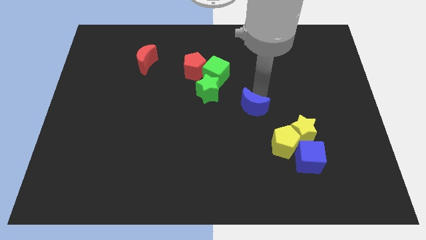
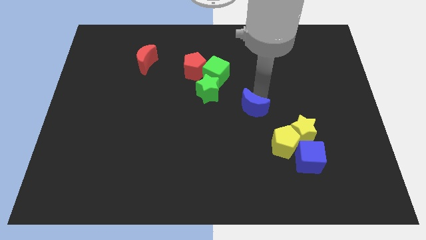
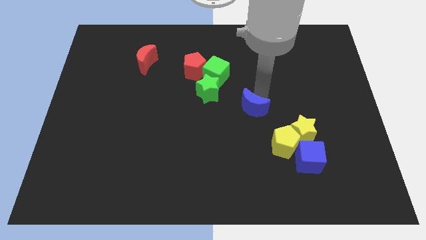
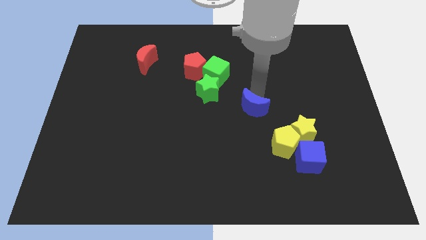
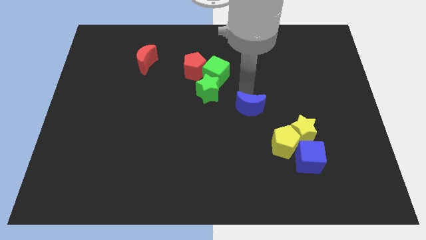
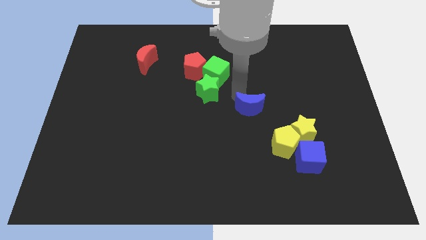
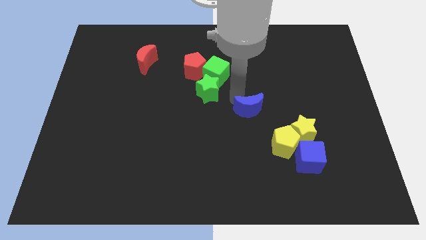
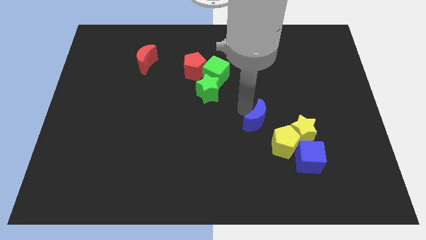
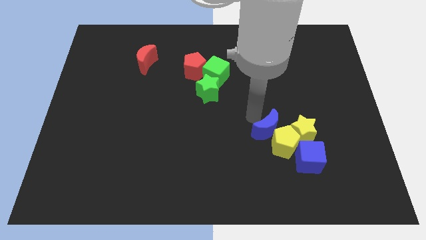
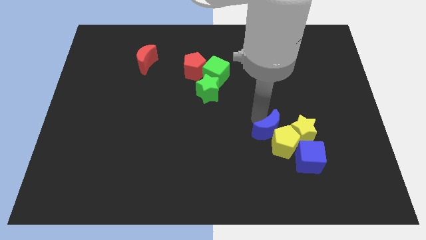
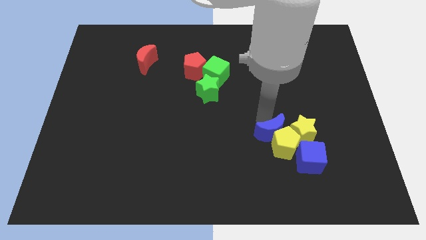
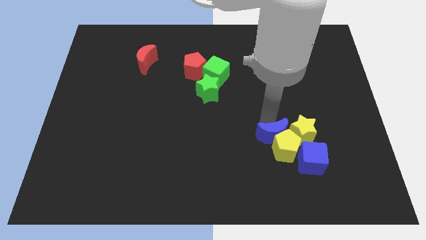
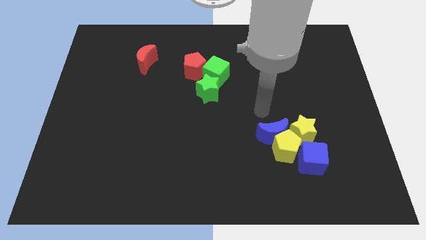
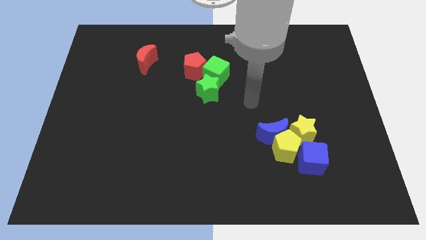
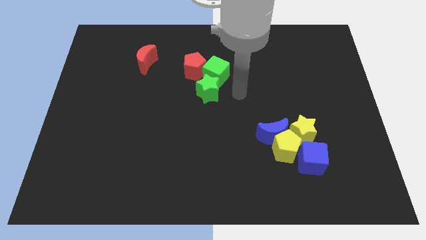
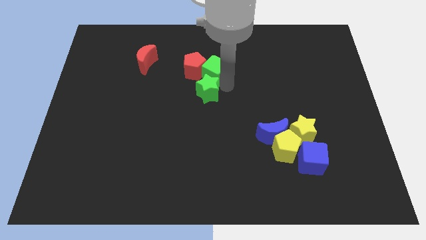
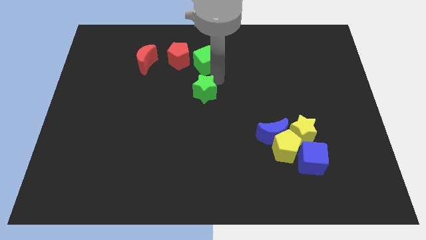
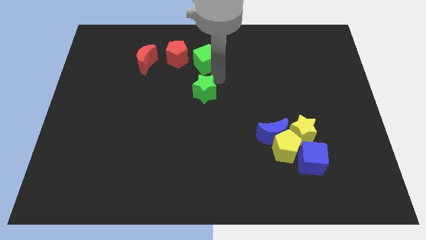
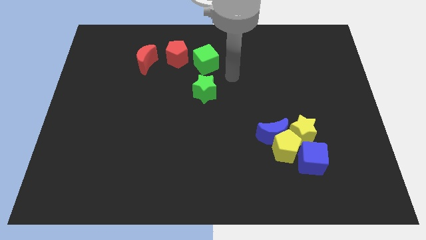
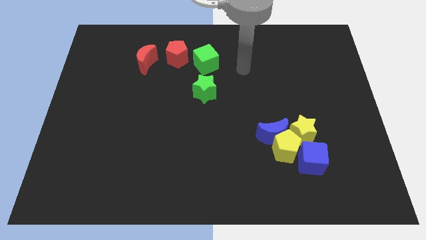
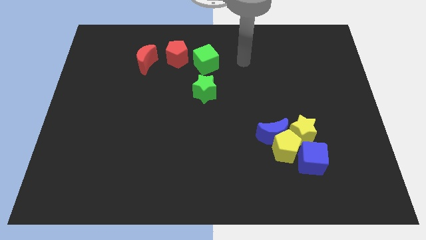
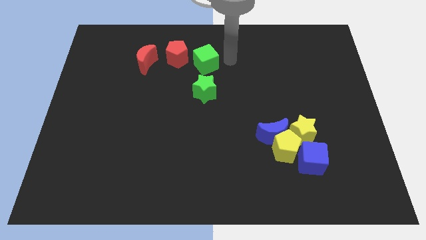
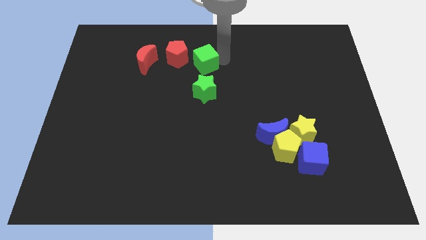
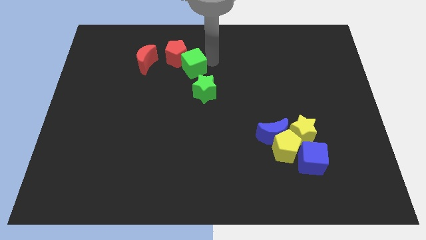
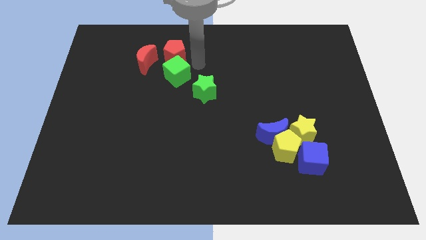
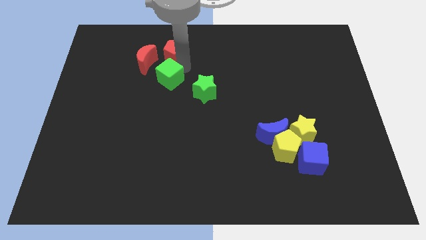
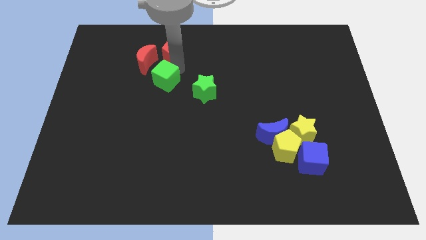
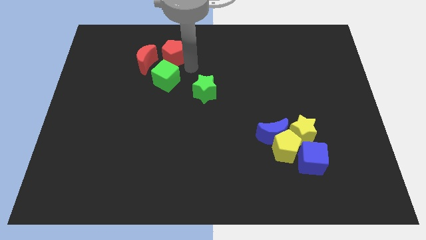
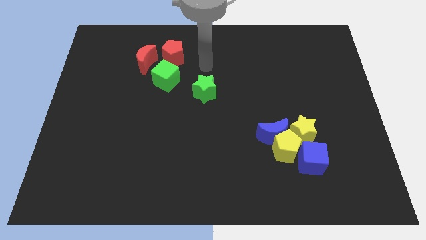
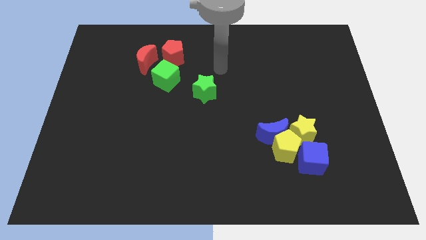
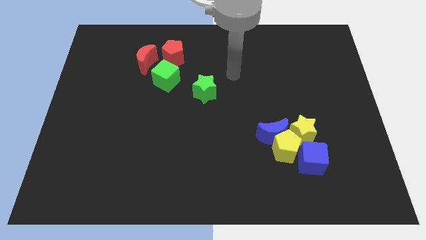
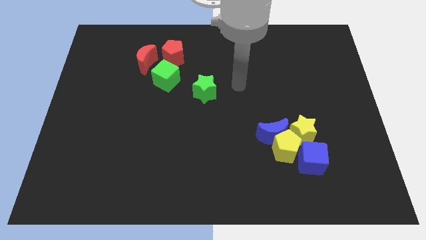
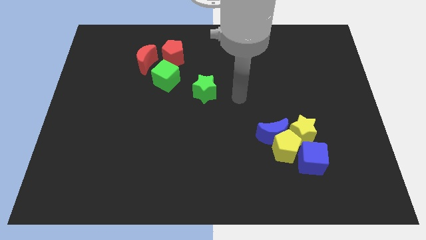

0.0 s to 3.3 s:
push green cube diagonally top left to the green star

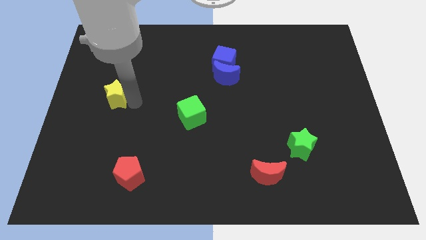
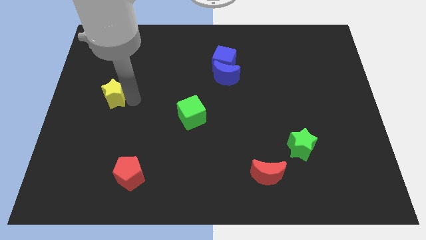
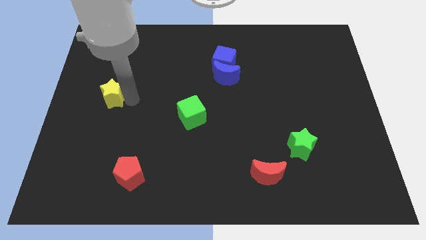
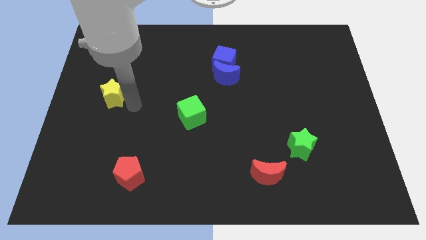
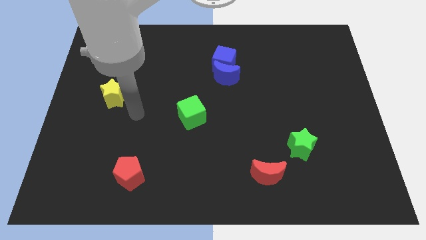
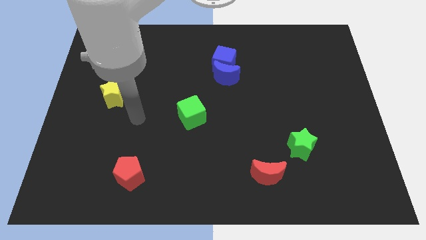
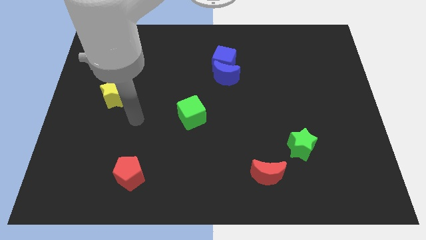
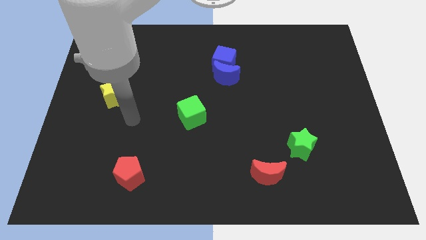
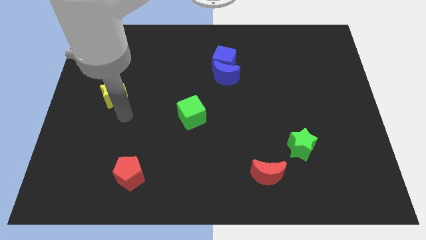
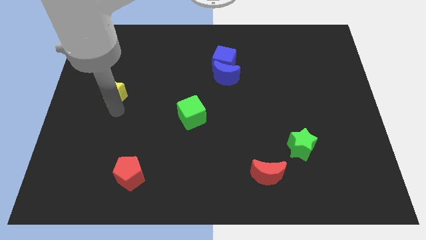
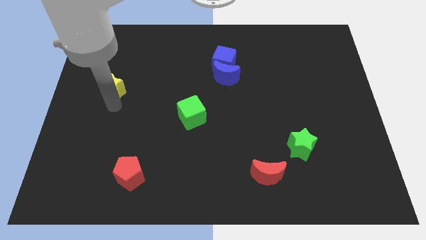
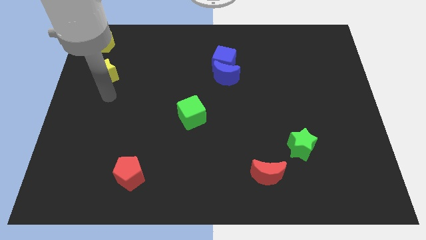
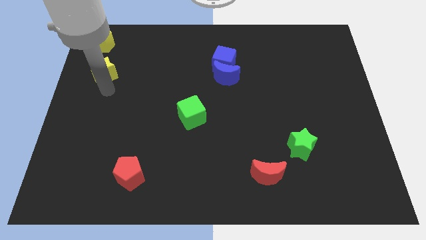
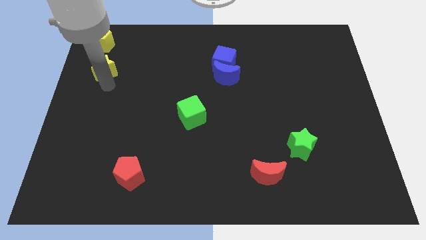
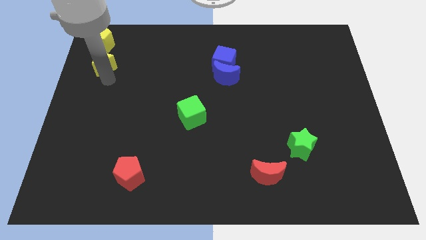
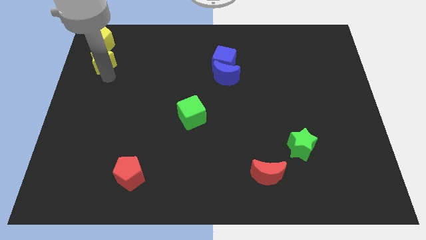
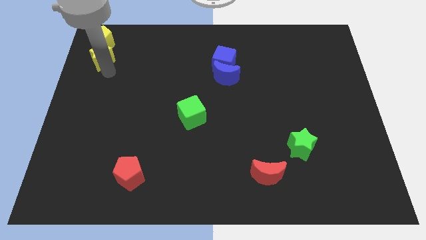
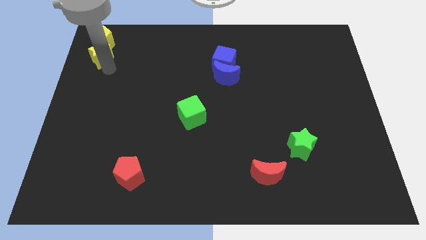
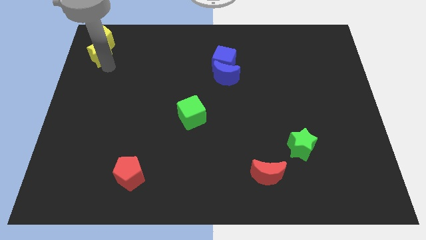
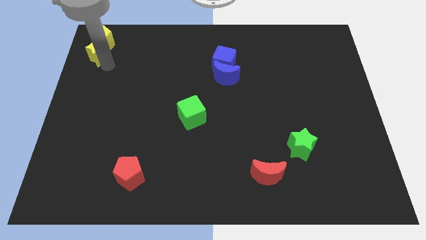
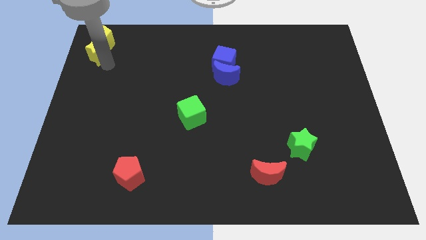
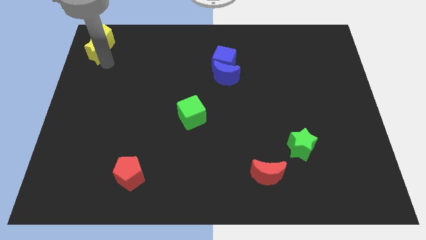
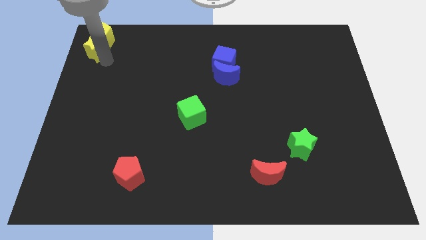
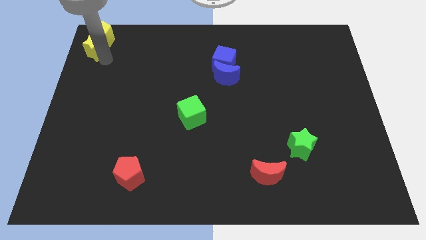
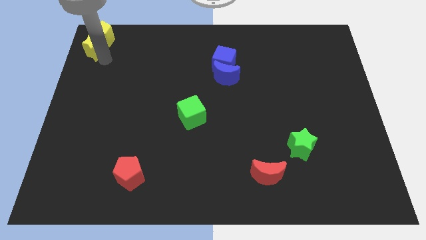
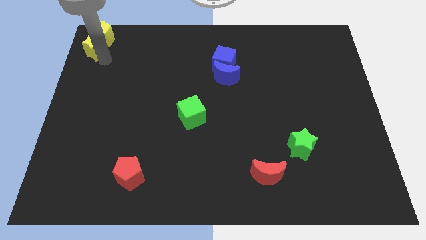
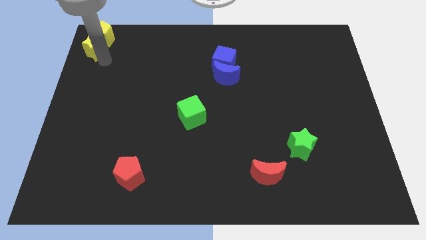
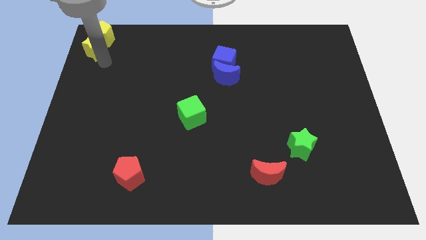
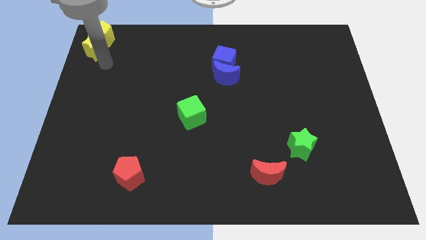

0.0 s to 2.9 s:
push the yellow star into the yellow pentagon

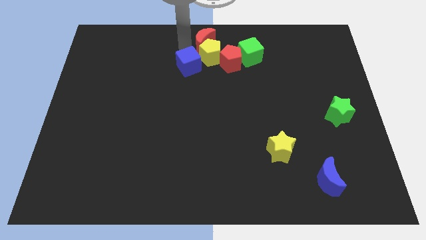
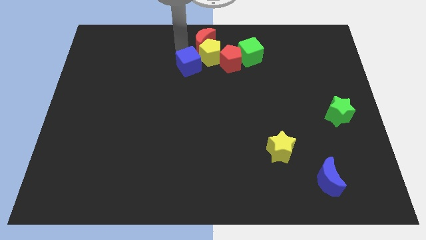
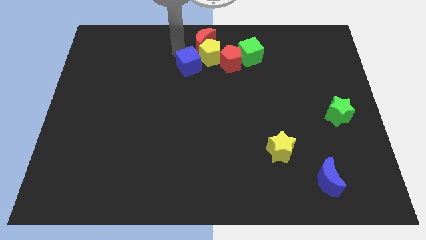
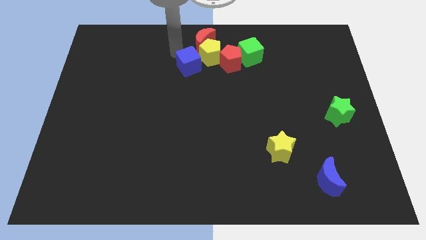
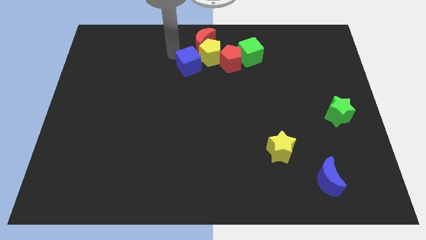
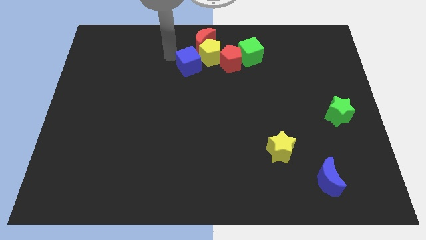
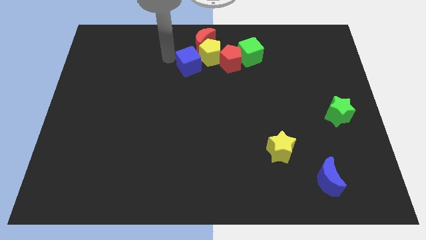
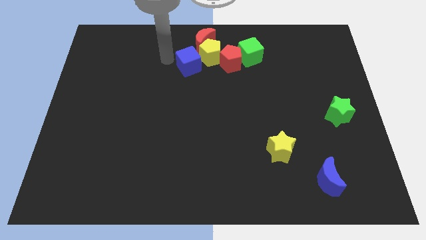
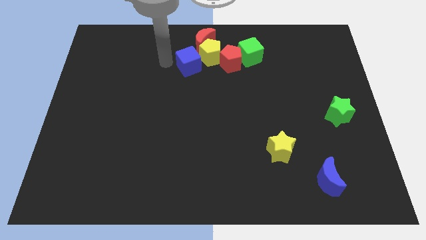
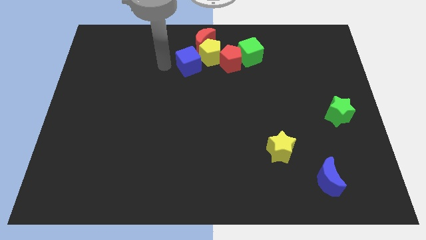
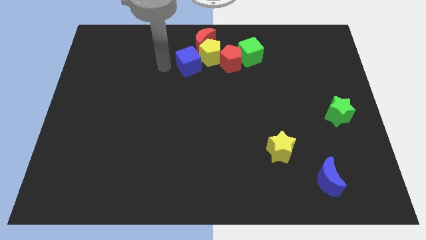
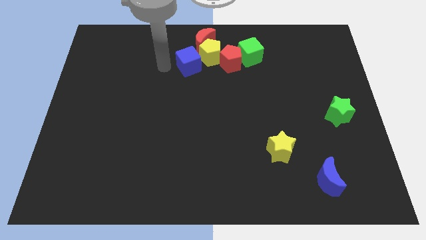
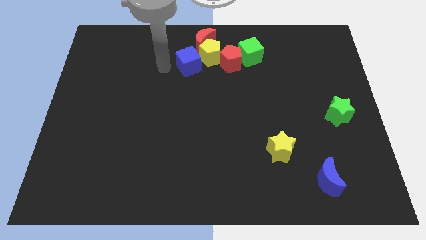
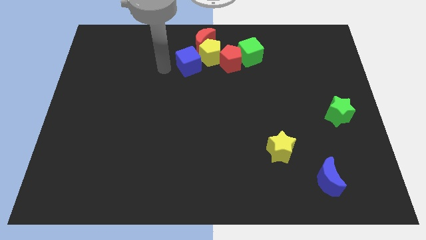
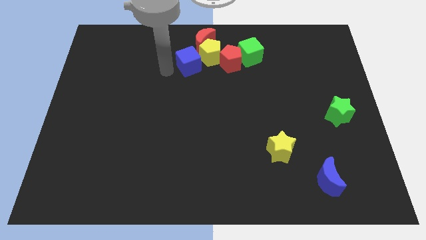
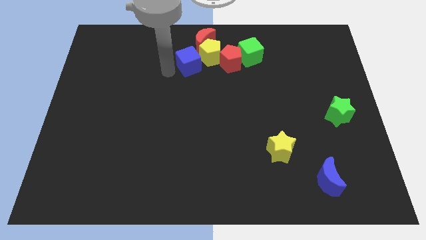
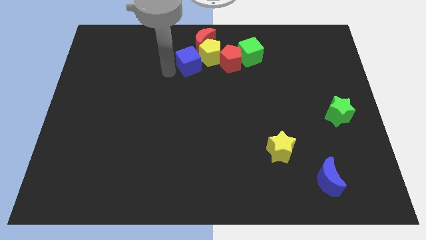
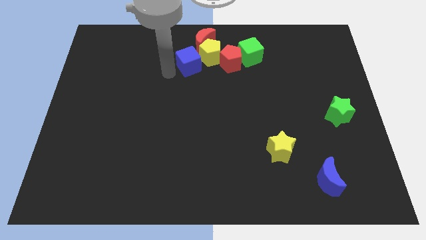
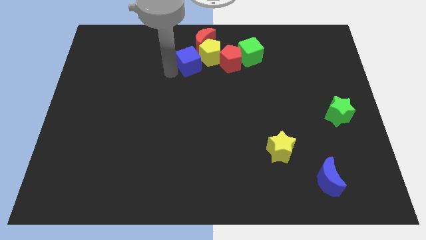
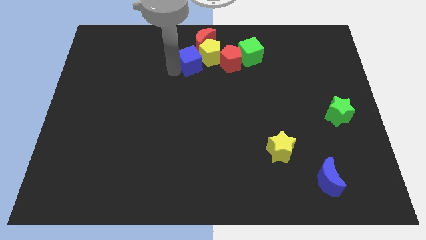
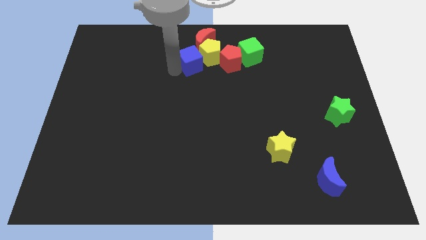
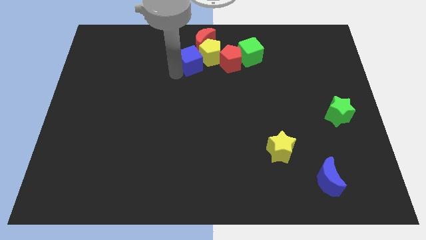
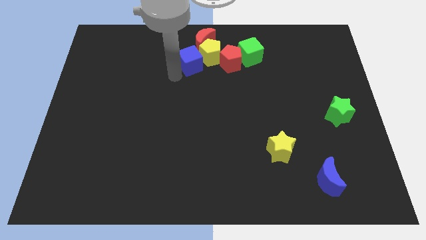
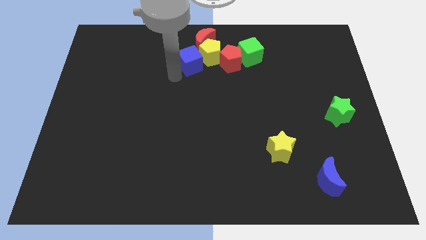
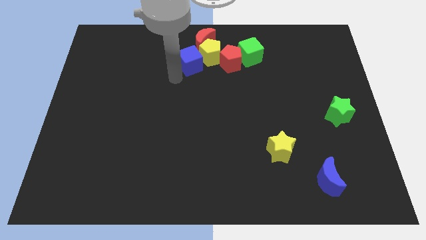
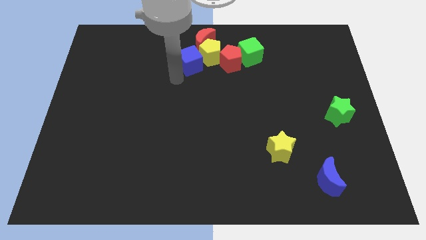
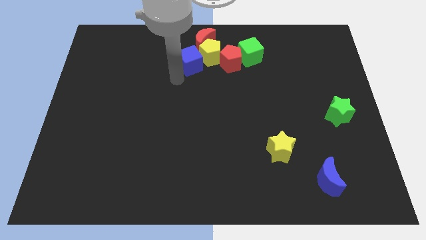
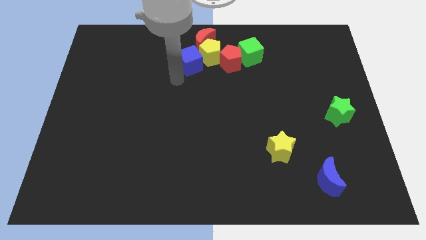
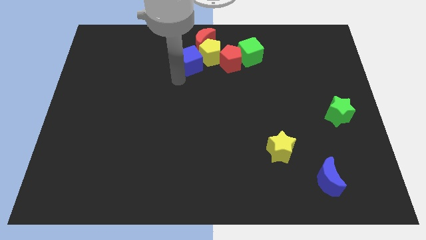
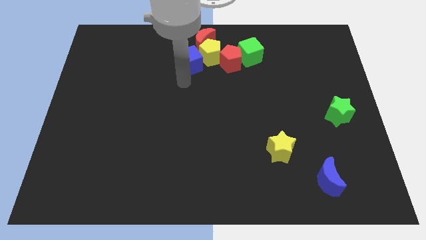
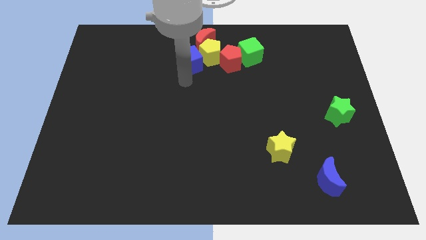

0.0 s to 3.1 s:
slightly adjust the blue cube into thee yellow pentagon
